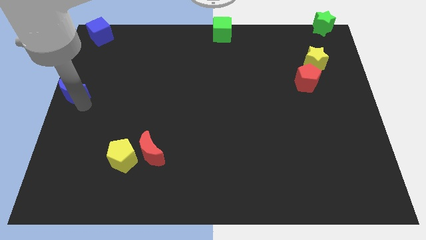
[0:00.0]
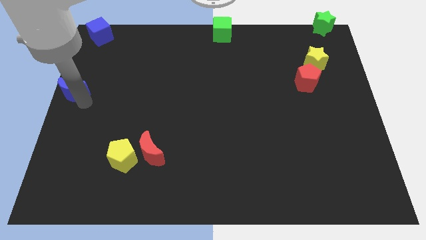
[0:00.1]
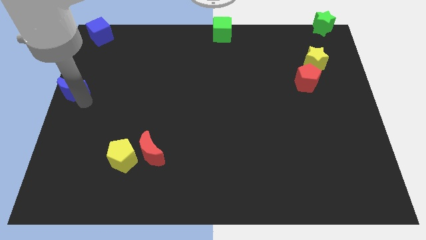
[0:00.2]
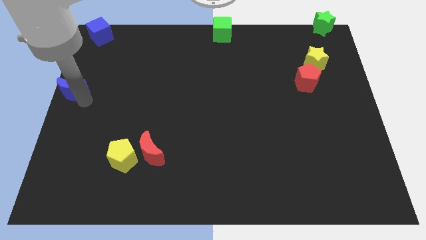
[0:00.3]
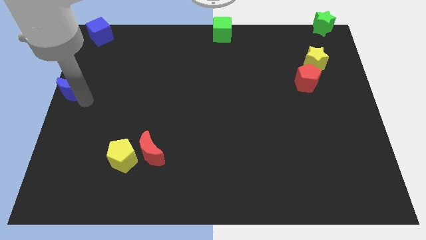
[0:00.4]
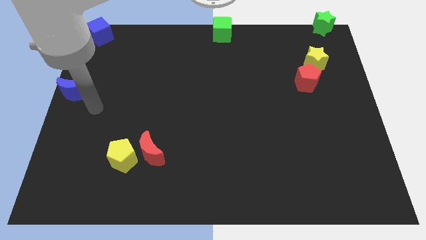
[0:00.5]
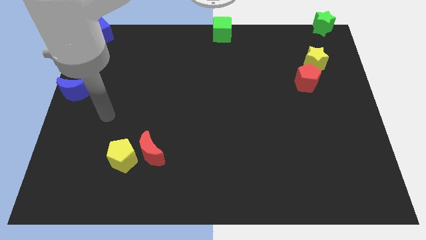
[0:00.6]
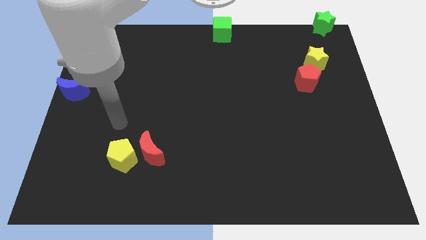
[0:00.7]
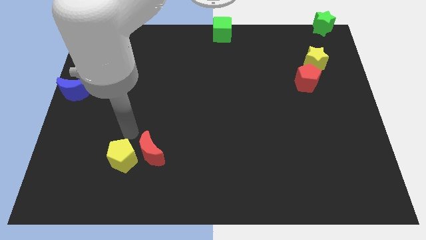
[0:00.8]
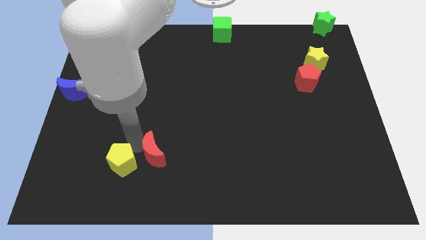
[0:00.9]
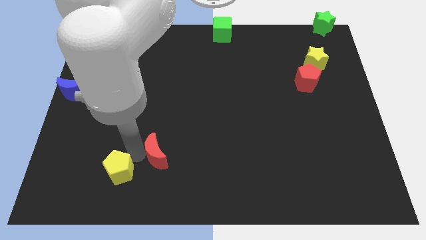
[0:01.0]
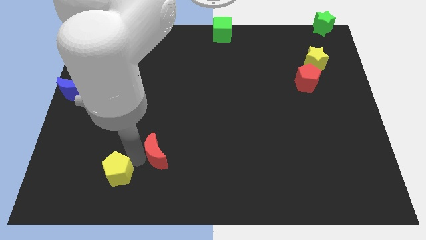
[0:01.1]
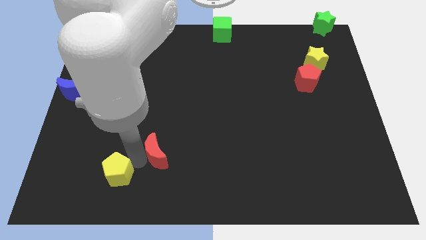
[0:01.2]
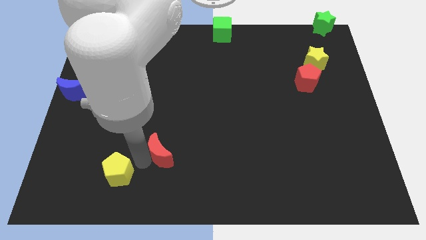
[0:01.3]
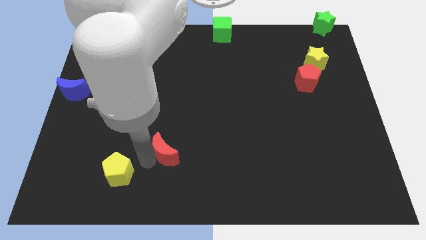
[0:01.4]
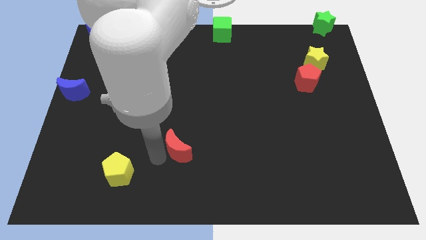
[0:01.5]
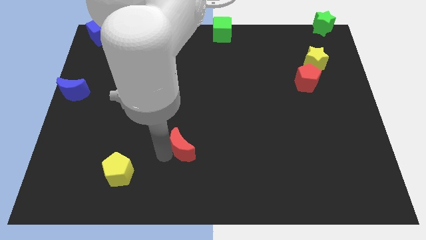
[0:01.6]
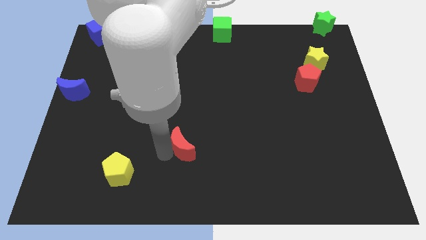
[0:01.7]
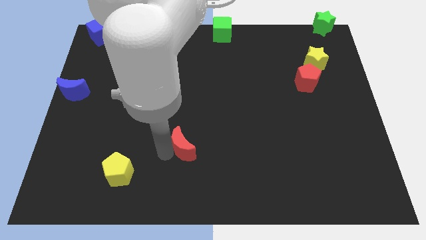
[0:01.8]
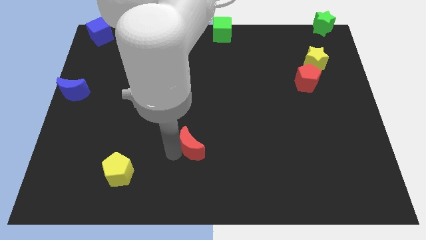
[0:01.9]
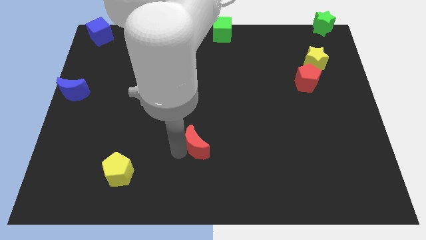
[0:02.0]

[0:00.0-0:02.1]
separate red moon from yellow pentagon

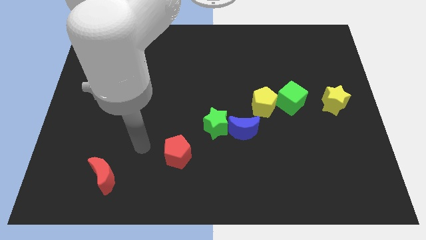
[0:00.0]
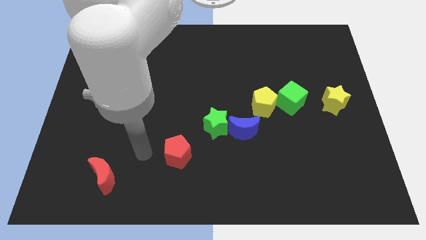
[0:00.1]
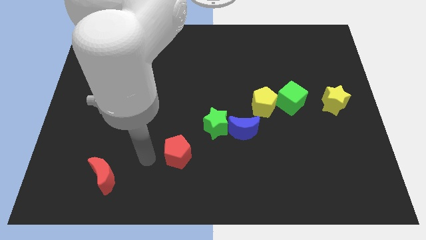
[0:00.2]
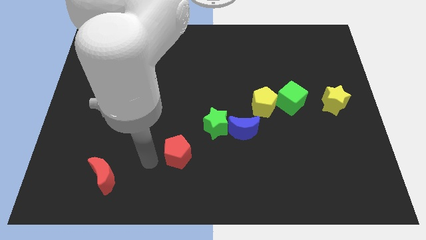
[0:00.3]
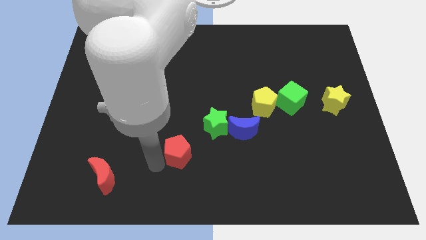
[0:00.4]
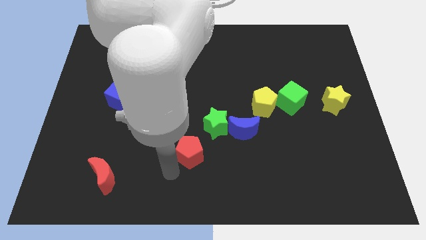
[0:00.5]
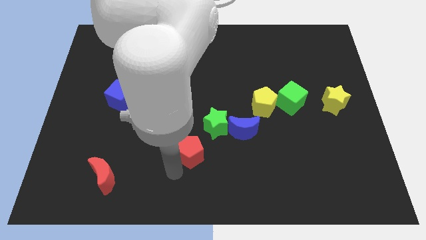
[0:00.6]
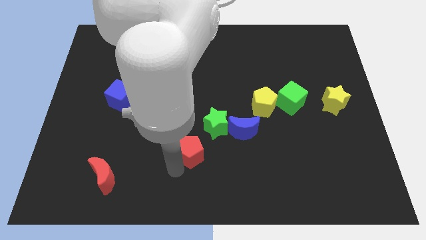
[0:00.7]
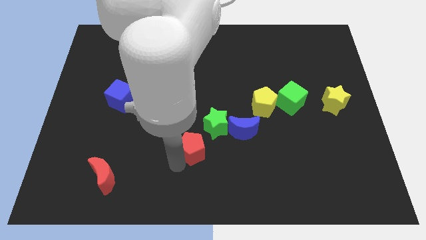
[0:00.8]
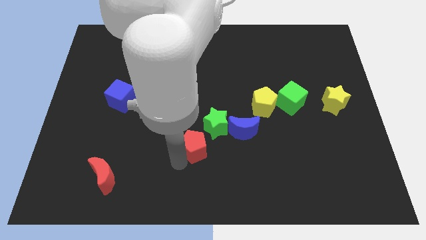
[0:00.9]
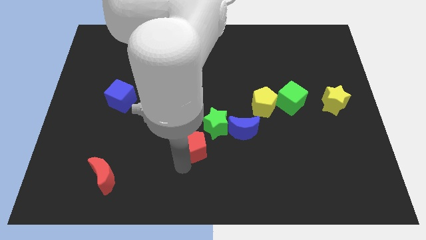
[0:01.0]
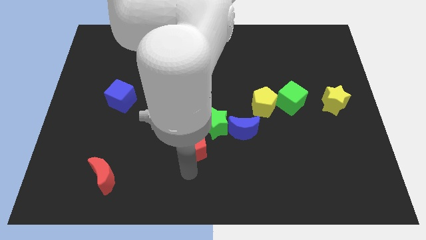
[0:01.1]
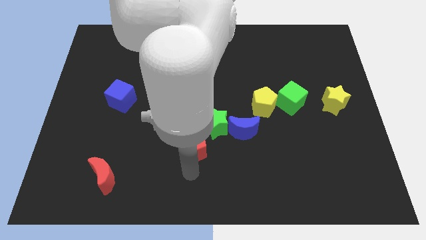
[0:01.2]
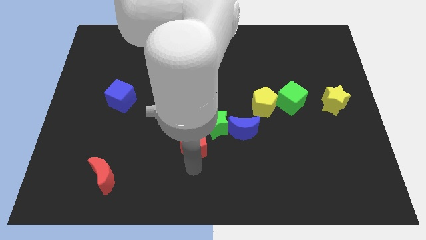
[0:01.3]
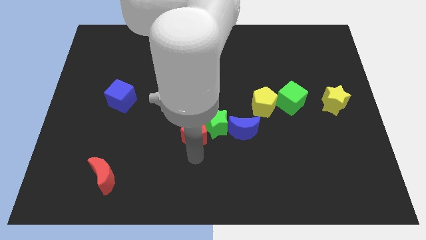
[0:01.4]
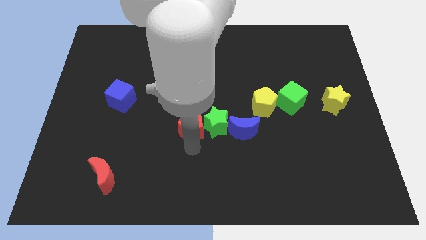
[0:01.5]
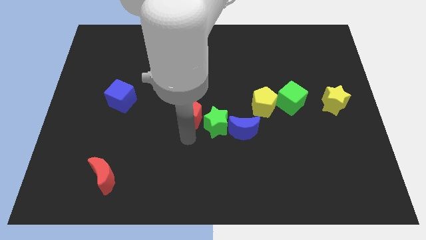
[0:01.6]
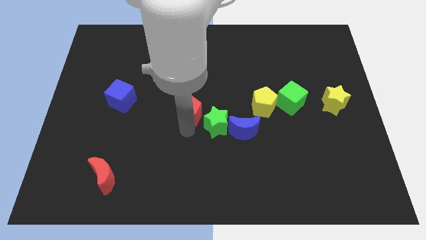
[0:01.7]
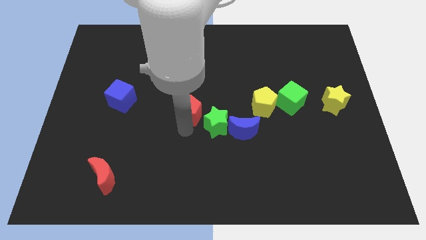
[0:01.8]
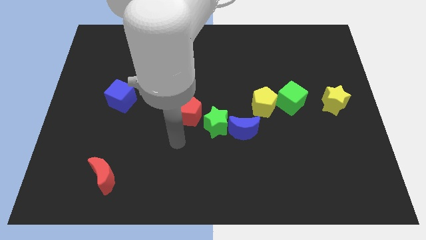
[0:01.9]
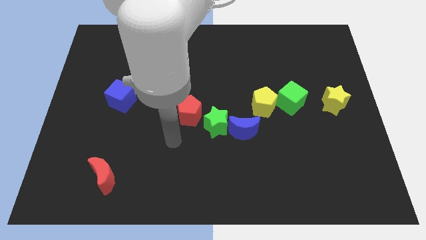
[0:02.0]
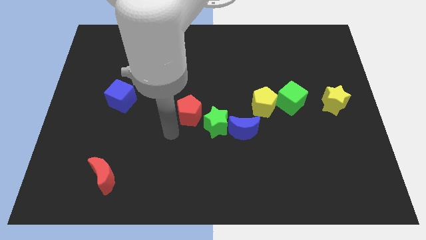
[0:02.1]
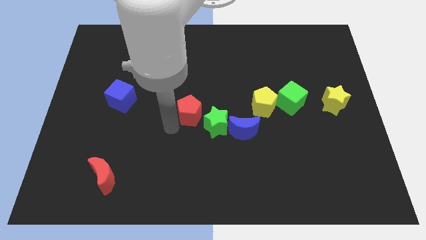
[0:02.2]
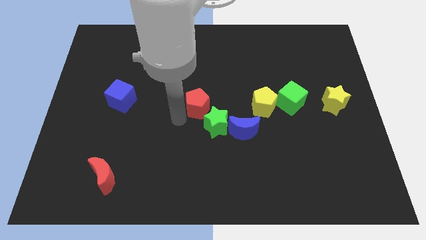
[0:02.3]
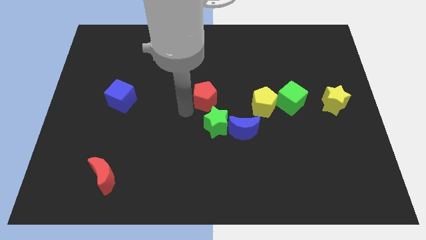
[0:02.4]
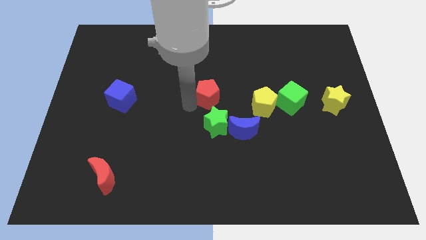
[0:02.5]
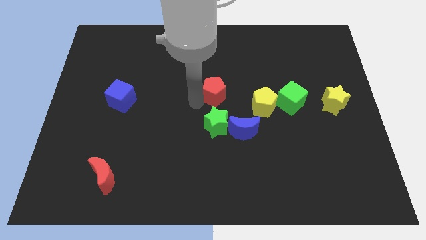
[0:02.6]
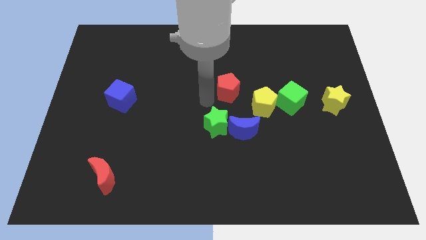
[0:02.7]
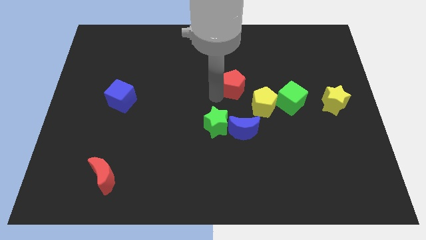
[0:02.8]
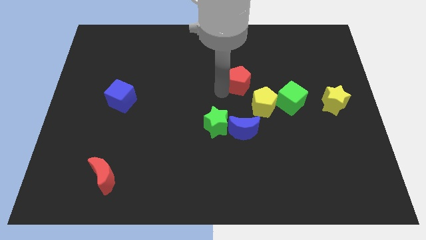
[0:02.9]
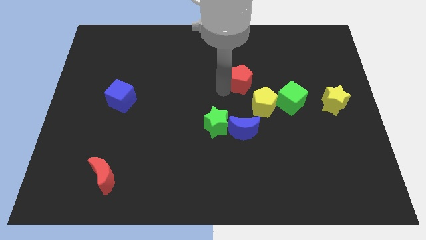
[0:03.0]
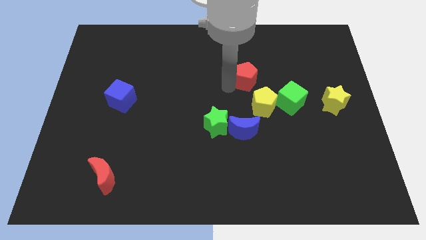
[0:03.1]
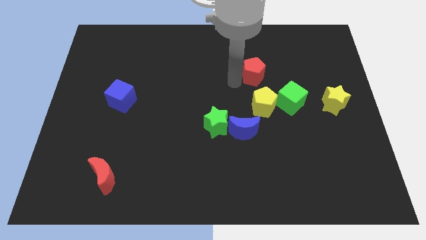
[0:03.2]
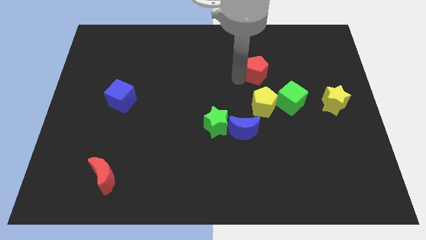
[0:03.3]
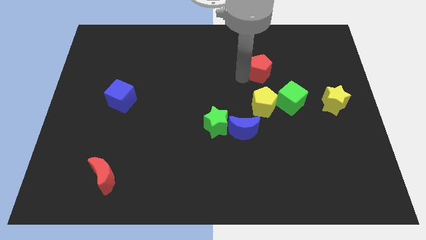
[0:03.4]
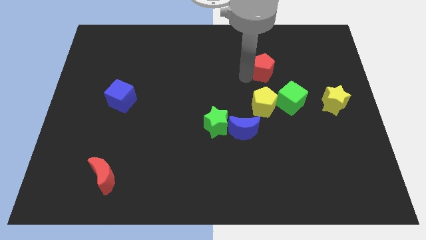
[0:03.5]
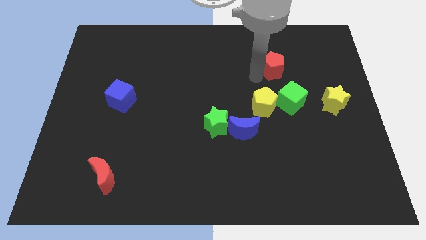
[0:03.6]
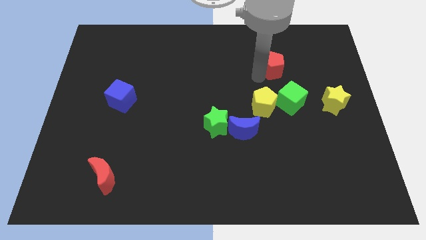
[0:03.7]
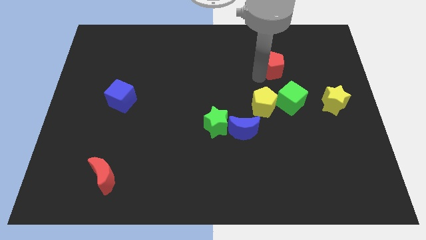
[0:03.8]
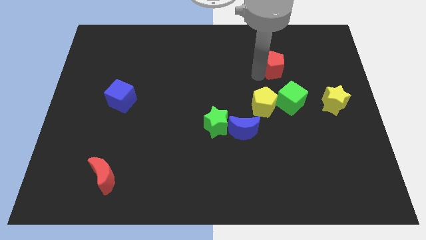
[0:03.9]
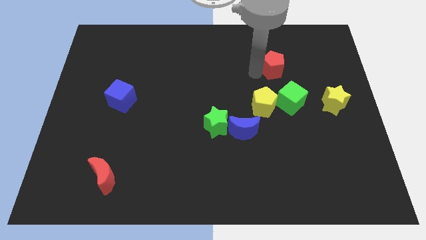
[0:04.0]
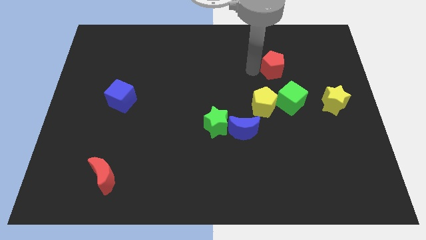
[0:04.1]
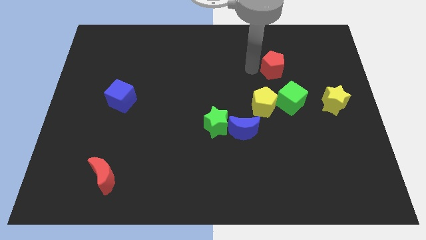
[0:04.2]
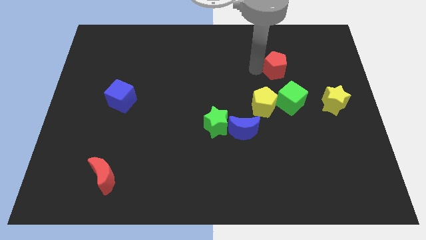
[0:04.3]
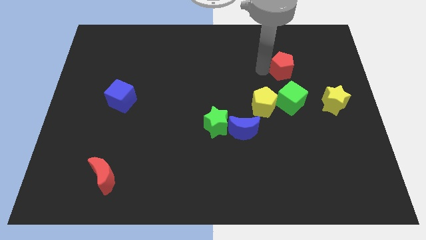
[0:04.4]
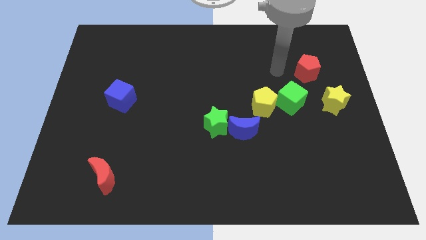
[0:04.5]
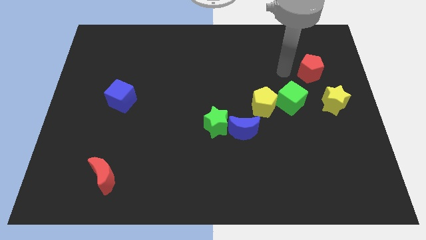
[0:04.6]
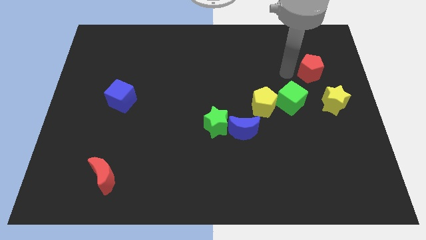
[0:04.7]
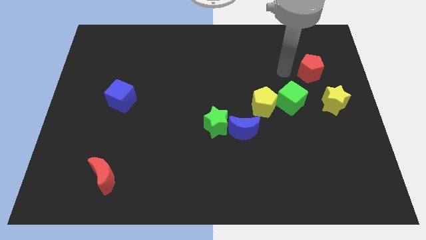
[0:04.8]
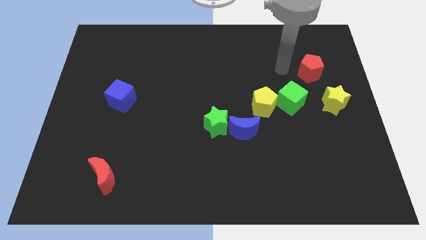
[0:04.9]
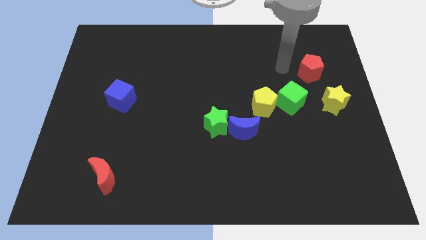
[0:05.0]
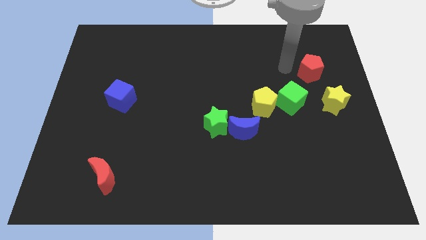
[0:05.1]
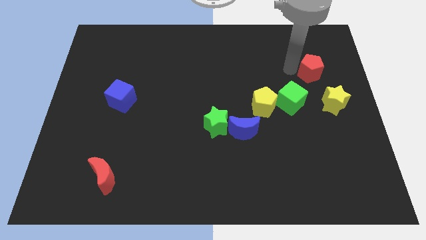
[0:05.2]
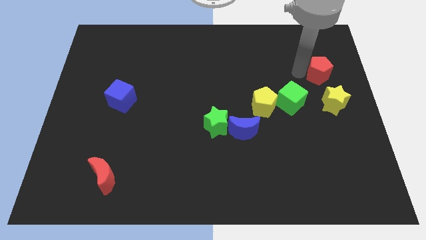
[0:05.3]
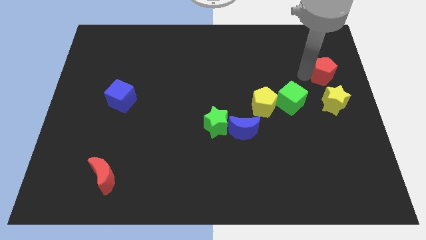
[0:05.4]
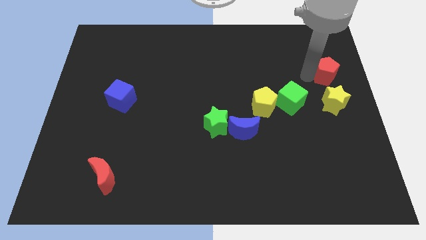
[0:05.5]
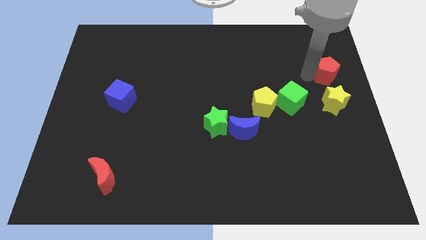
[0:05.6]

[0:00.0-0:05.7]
place the red pentagon above the yellow star

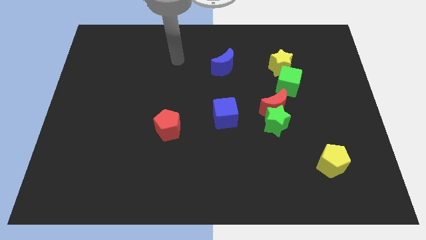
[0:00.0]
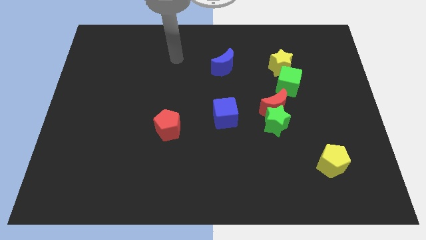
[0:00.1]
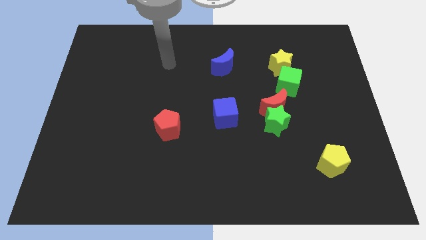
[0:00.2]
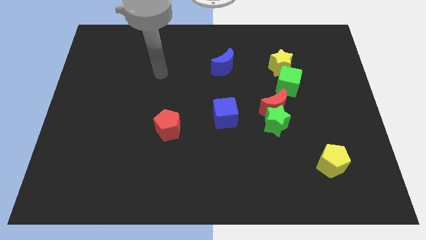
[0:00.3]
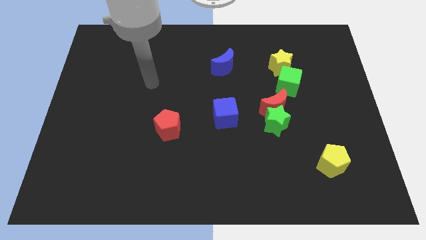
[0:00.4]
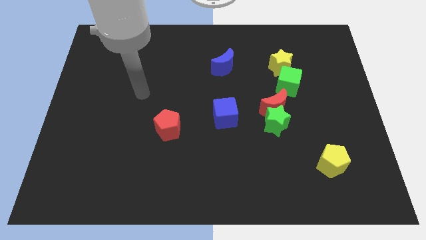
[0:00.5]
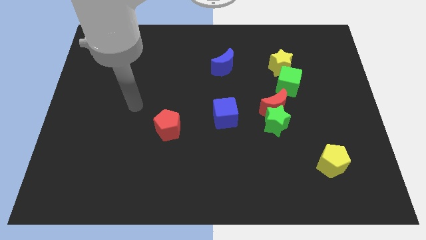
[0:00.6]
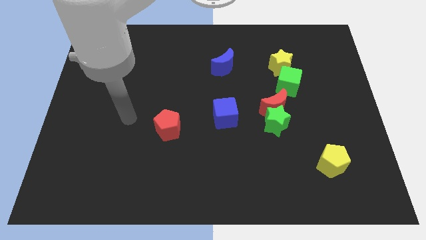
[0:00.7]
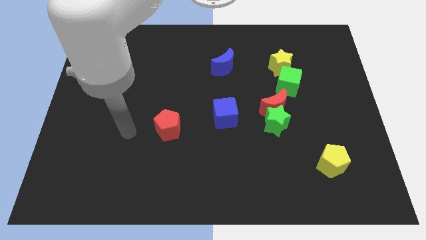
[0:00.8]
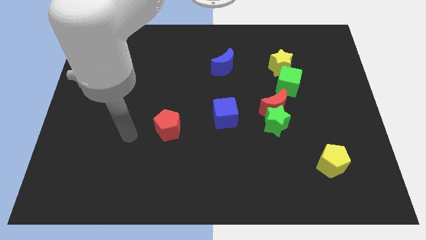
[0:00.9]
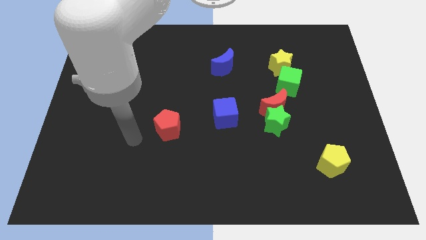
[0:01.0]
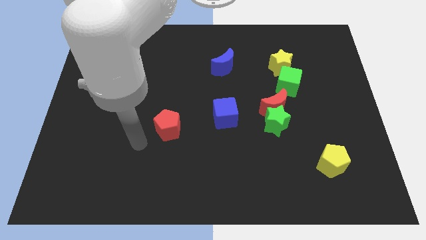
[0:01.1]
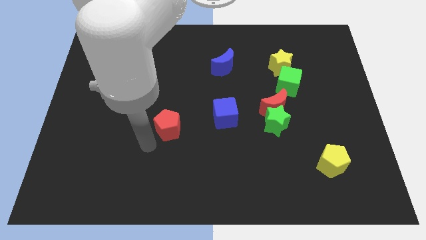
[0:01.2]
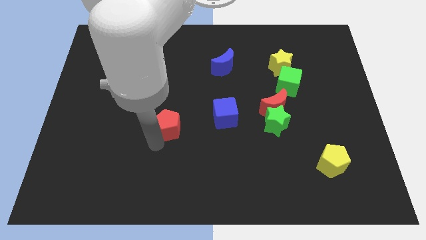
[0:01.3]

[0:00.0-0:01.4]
move your arm towards red pentagon
